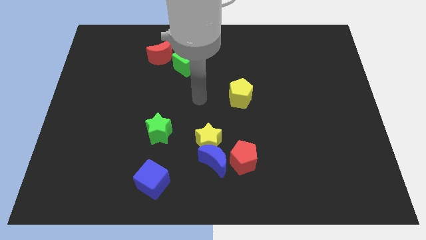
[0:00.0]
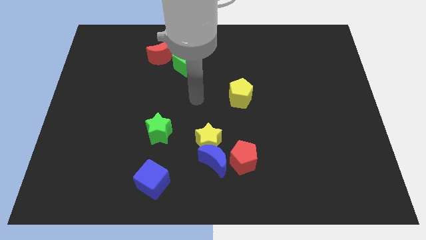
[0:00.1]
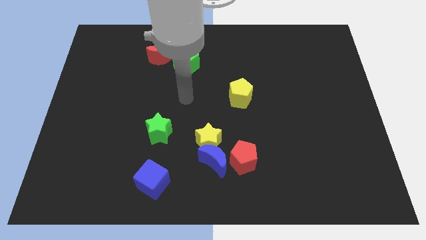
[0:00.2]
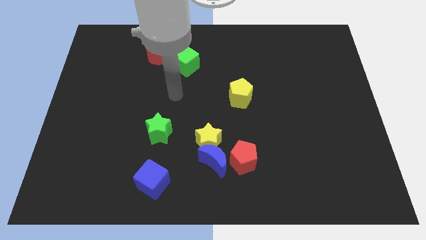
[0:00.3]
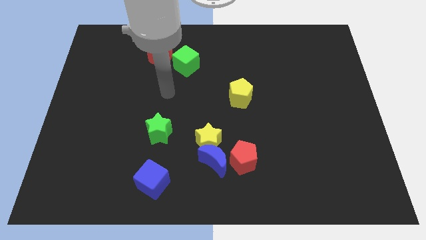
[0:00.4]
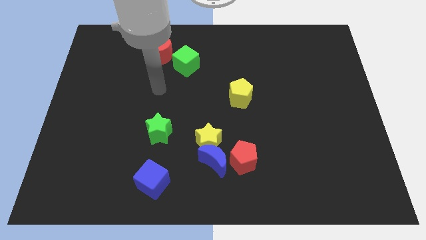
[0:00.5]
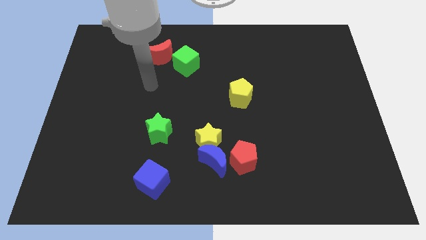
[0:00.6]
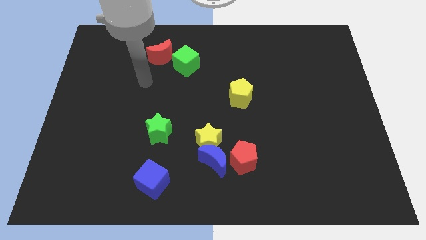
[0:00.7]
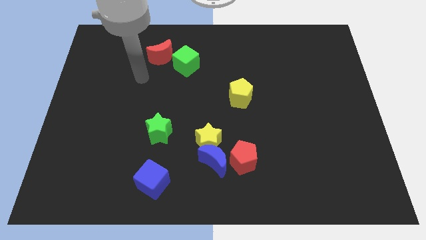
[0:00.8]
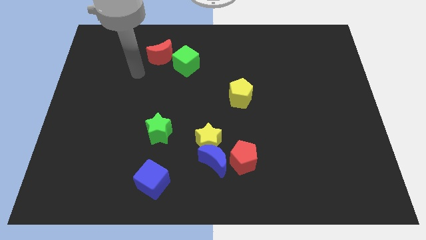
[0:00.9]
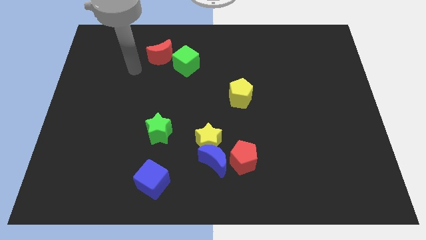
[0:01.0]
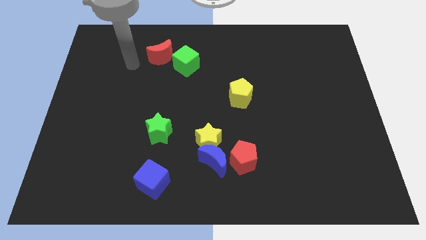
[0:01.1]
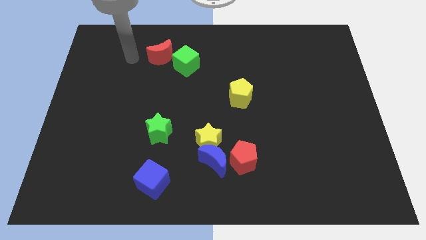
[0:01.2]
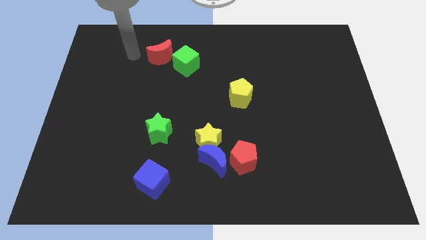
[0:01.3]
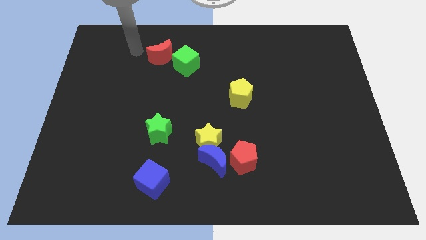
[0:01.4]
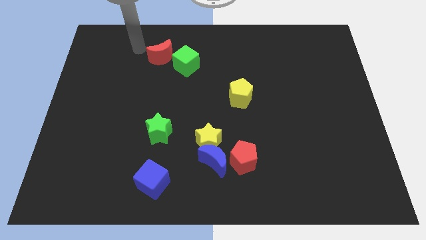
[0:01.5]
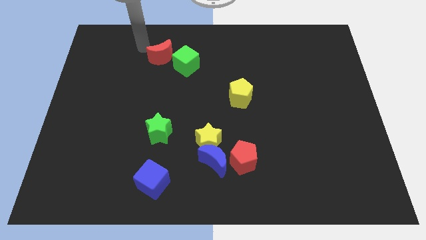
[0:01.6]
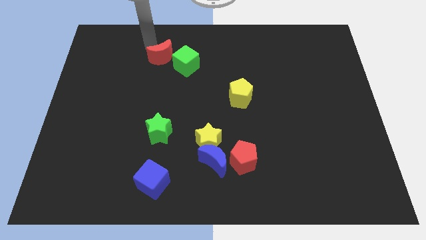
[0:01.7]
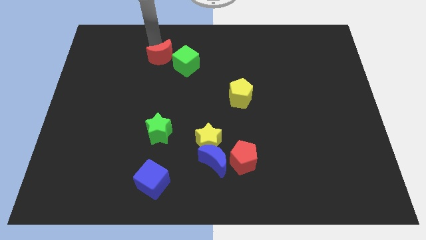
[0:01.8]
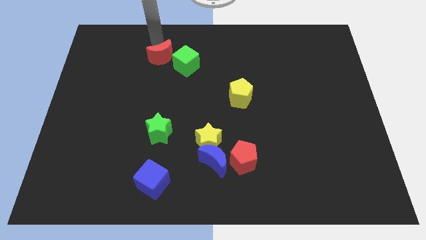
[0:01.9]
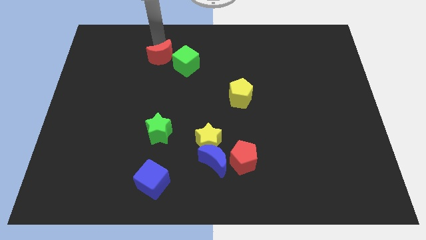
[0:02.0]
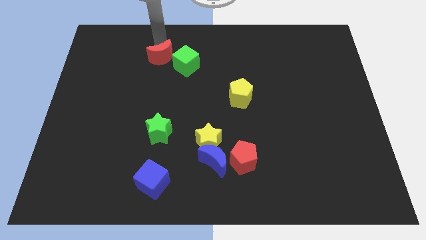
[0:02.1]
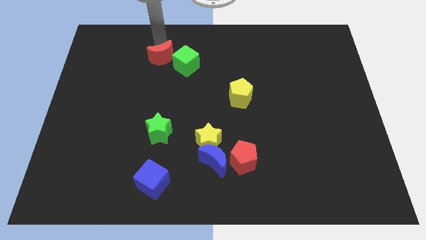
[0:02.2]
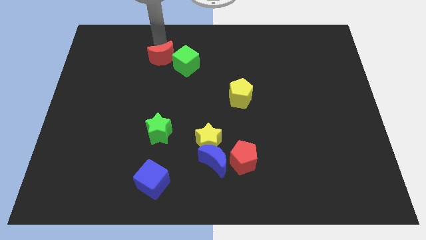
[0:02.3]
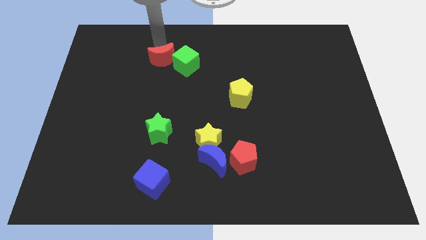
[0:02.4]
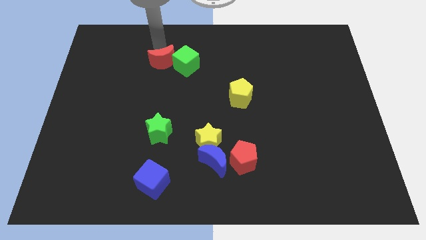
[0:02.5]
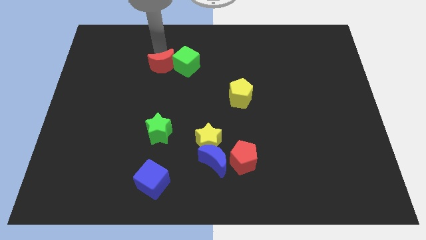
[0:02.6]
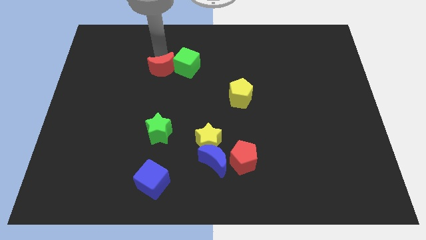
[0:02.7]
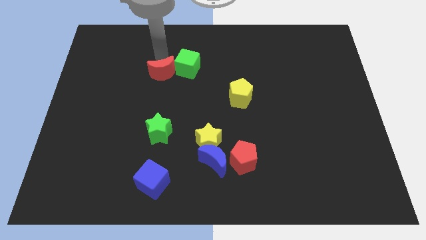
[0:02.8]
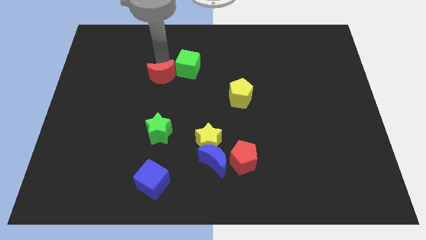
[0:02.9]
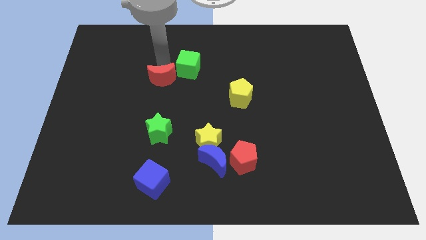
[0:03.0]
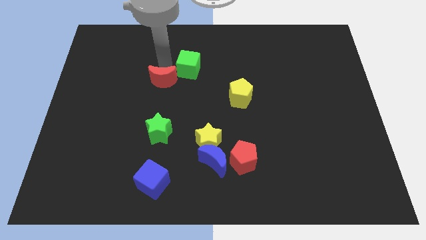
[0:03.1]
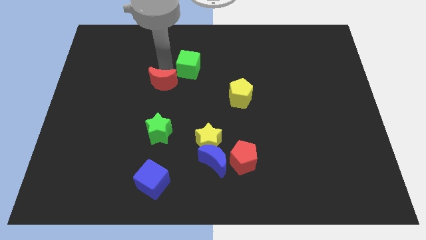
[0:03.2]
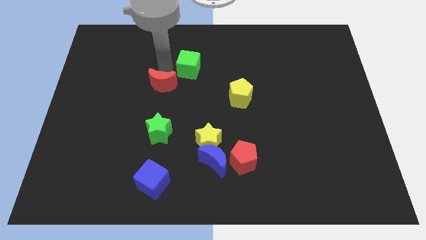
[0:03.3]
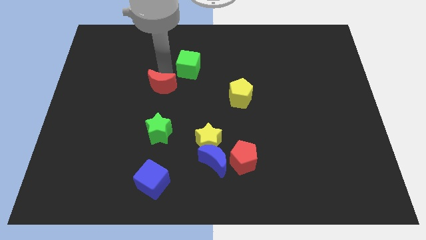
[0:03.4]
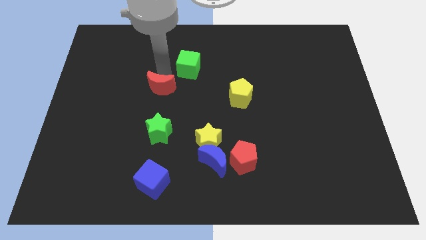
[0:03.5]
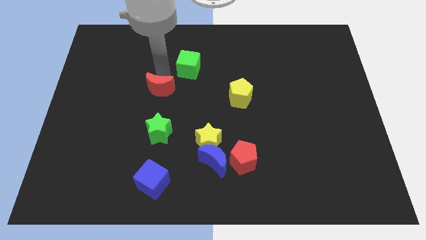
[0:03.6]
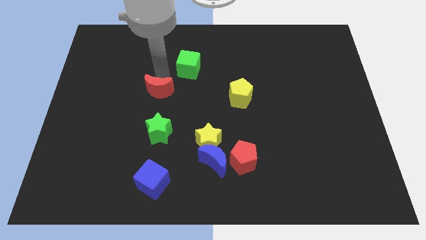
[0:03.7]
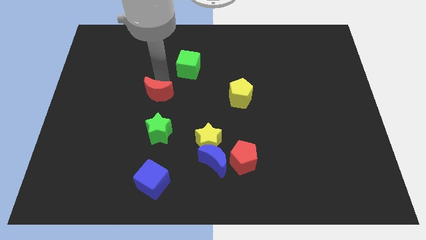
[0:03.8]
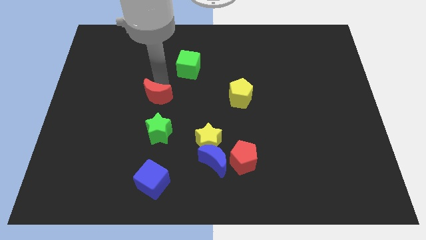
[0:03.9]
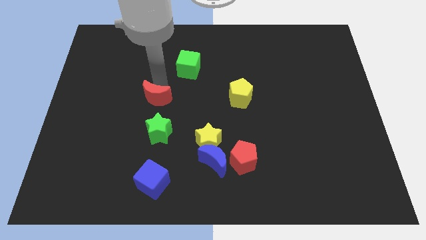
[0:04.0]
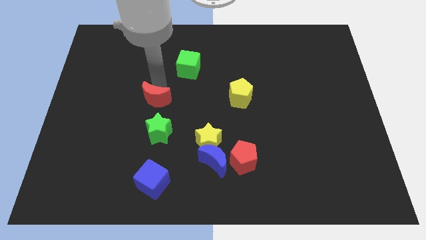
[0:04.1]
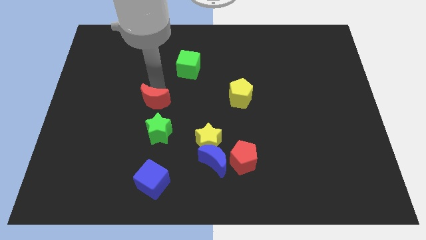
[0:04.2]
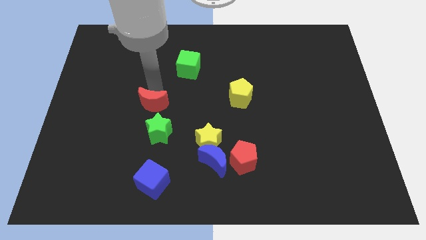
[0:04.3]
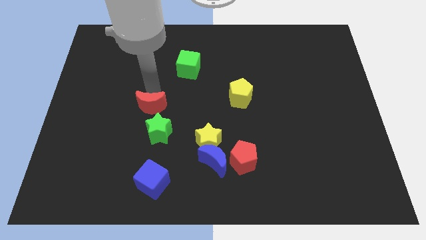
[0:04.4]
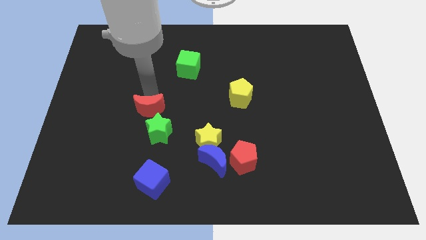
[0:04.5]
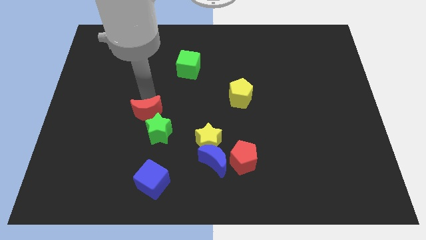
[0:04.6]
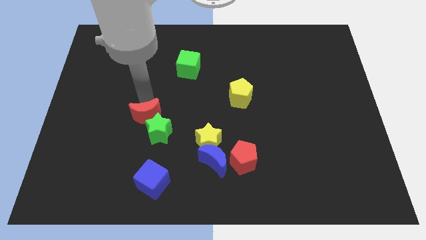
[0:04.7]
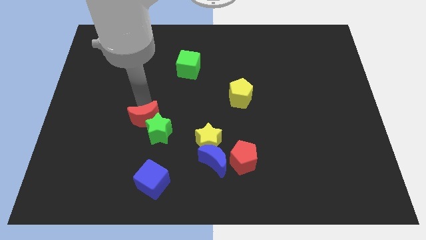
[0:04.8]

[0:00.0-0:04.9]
slide the red moon close to the green star

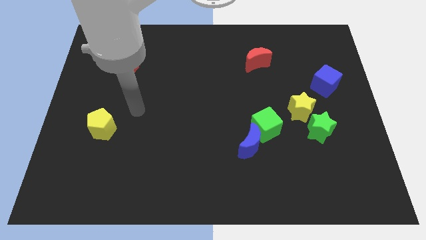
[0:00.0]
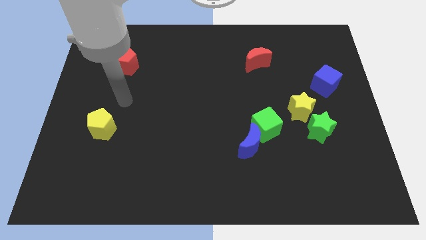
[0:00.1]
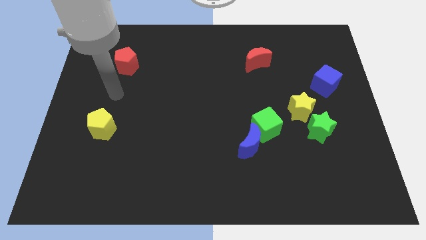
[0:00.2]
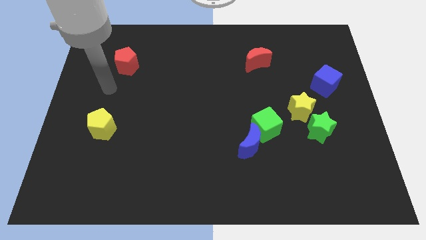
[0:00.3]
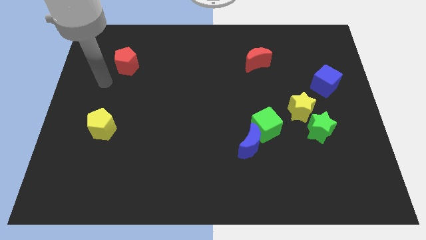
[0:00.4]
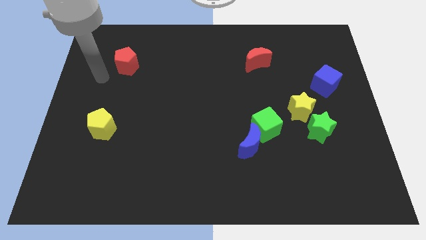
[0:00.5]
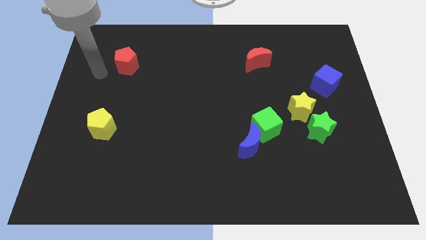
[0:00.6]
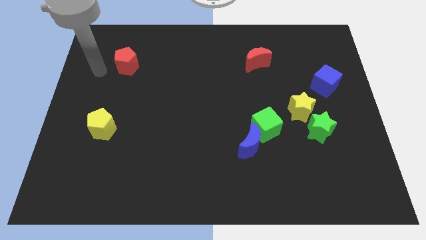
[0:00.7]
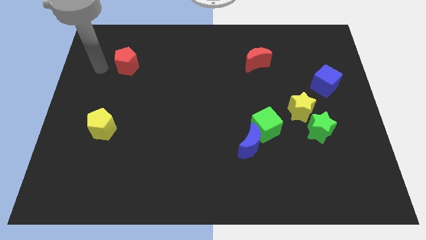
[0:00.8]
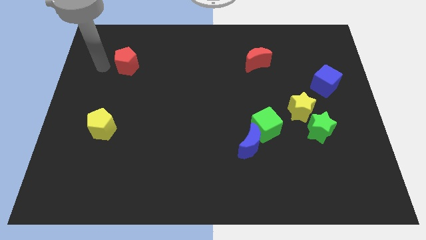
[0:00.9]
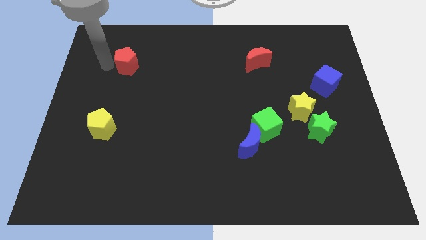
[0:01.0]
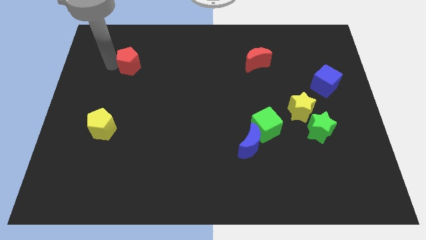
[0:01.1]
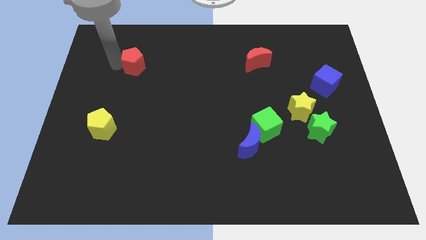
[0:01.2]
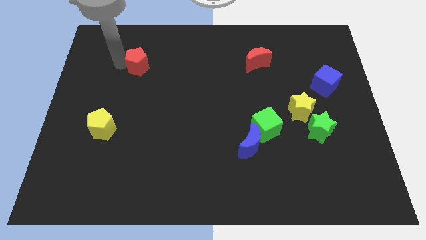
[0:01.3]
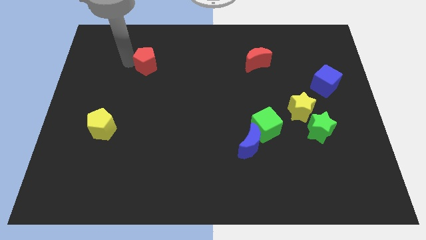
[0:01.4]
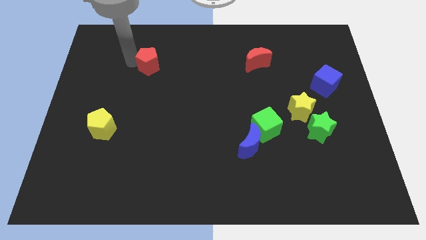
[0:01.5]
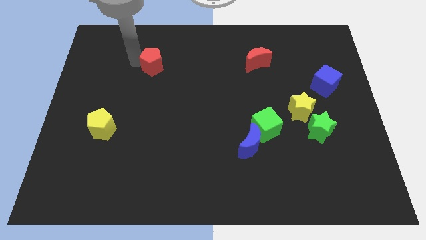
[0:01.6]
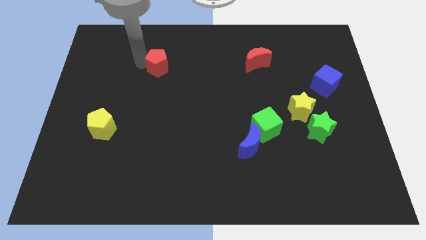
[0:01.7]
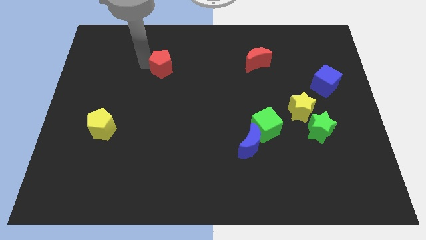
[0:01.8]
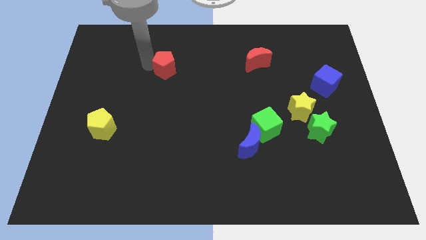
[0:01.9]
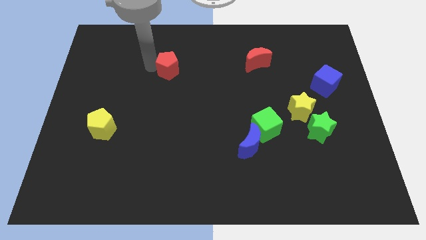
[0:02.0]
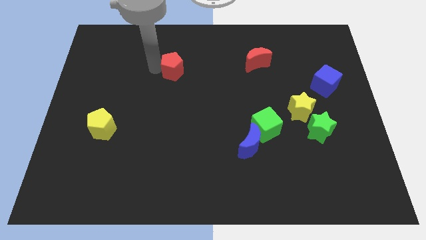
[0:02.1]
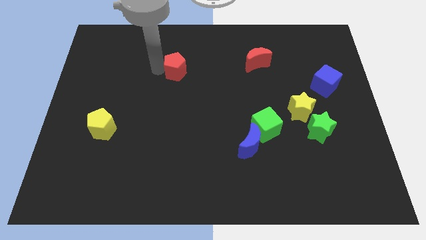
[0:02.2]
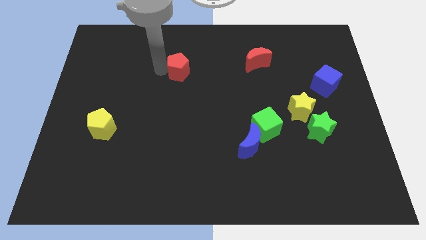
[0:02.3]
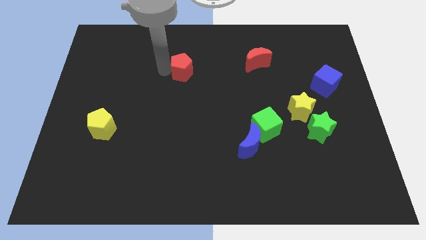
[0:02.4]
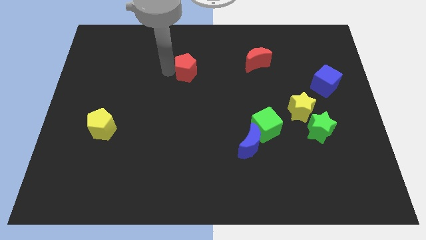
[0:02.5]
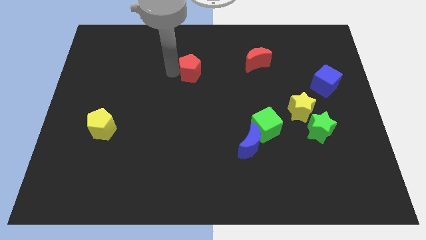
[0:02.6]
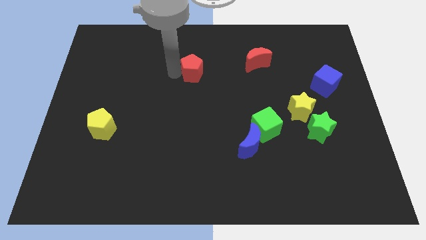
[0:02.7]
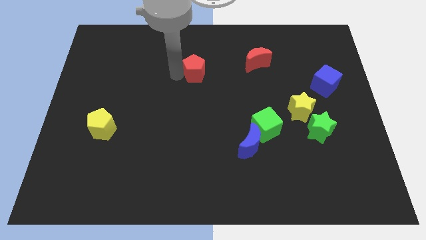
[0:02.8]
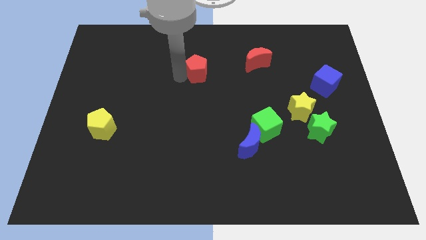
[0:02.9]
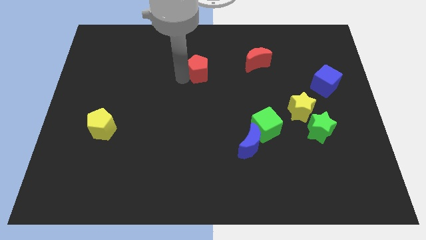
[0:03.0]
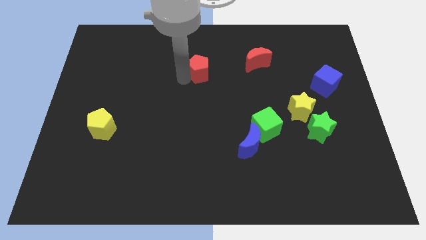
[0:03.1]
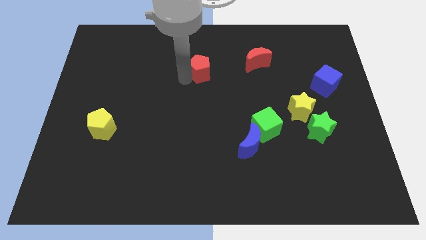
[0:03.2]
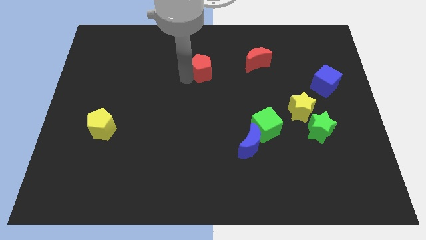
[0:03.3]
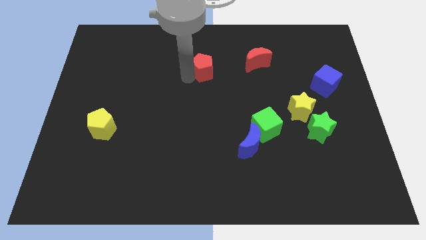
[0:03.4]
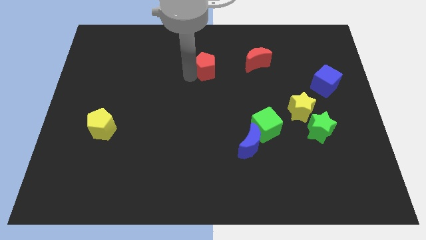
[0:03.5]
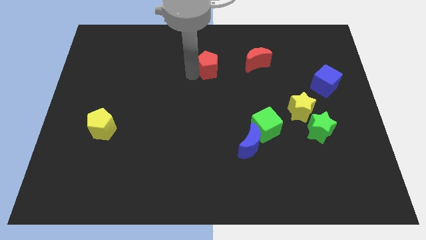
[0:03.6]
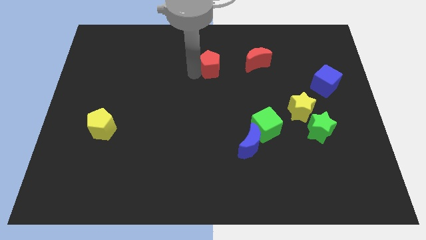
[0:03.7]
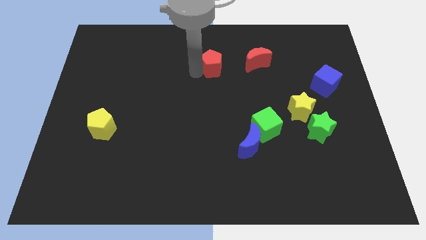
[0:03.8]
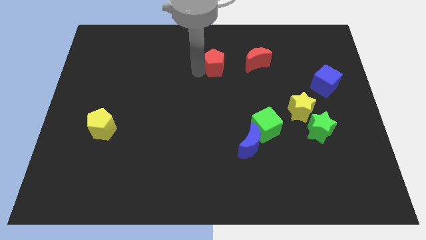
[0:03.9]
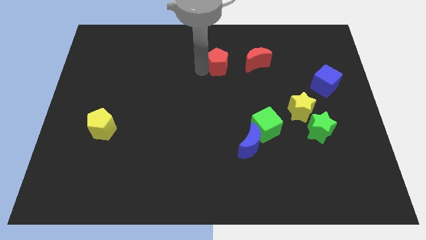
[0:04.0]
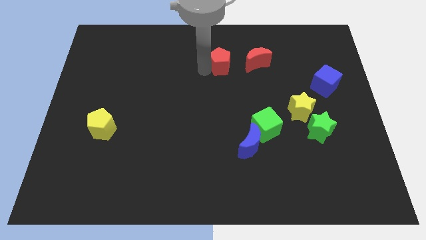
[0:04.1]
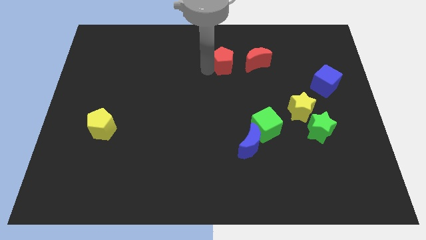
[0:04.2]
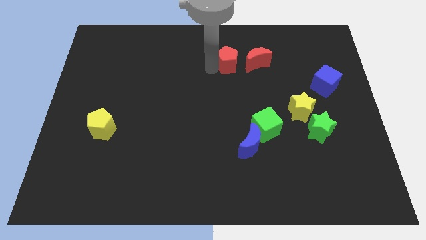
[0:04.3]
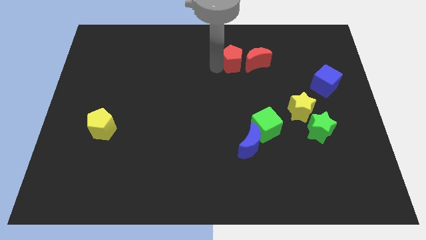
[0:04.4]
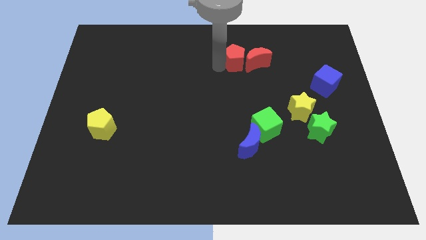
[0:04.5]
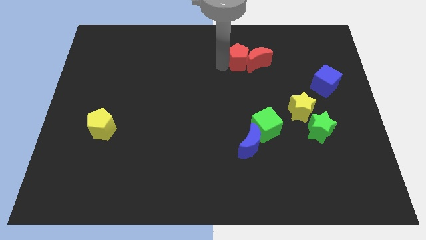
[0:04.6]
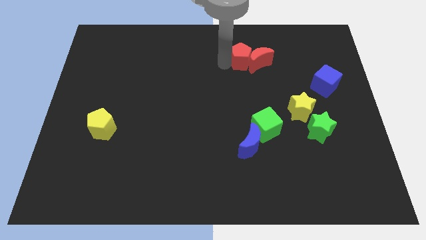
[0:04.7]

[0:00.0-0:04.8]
move the red pentagon towards the red moon
